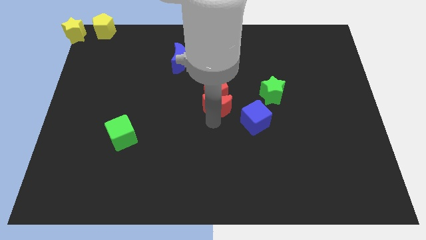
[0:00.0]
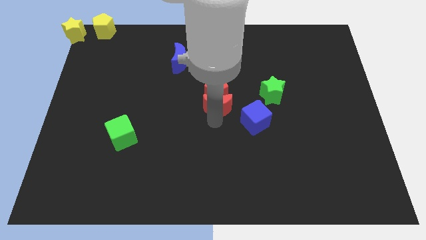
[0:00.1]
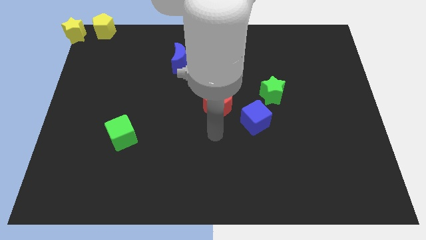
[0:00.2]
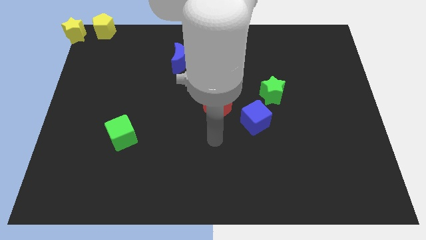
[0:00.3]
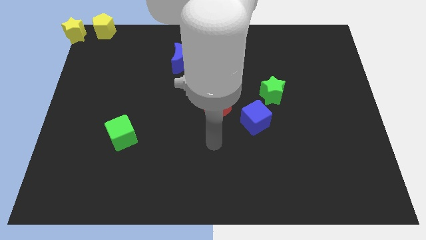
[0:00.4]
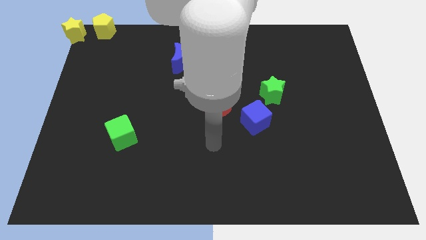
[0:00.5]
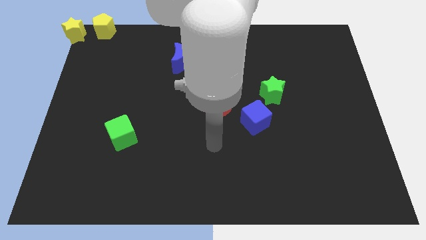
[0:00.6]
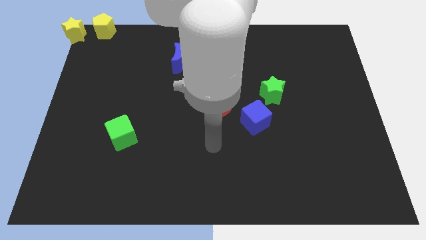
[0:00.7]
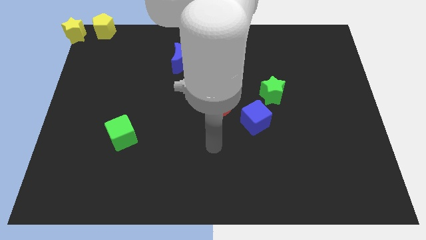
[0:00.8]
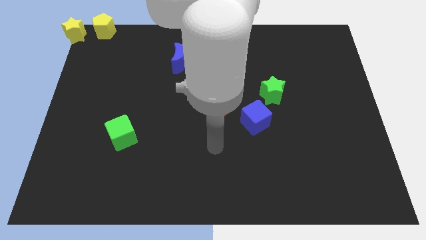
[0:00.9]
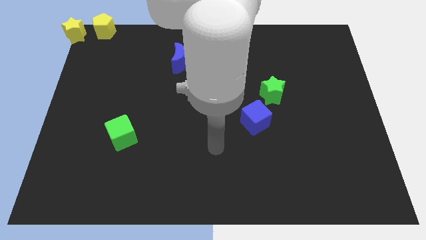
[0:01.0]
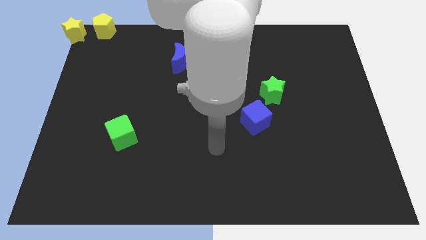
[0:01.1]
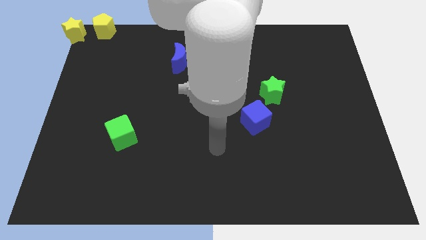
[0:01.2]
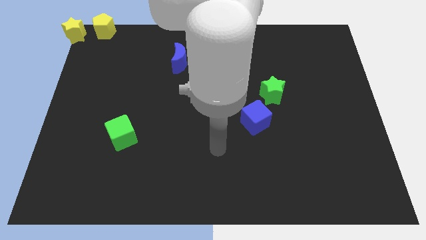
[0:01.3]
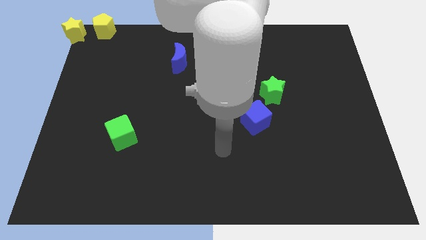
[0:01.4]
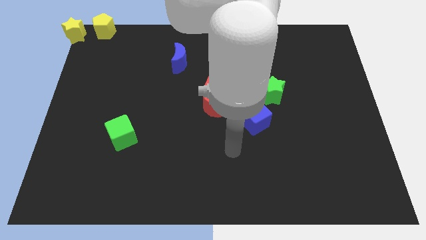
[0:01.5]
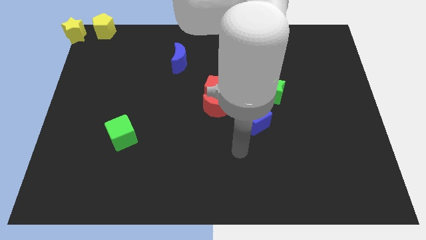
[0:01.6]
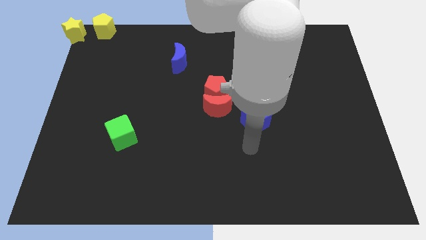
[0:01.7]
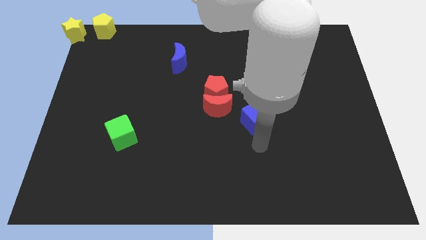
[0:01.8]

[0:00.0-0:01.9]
point your arm at the bottom of blue cube

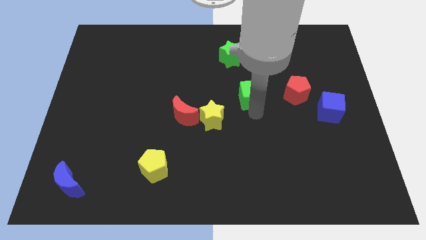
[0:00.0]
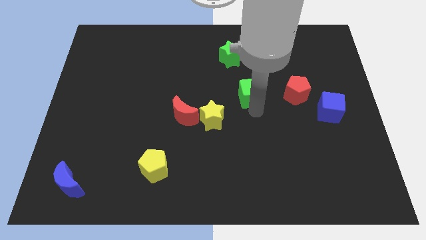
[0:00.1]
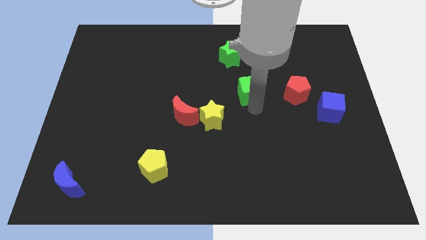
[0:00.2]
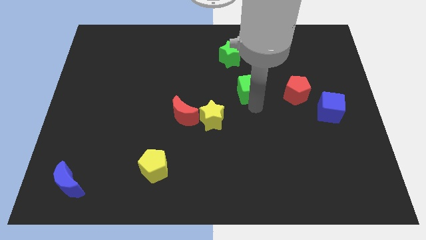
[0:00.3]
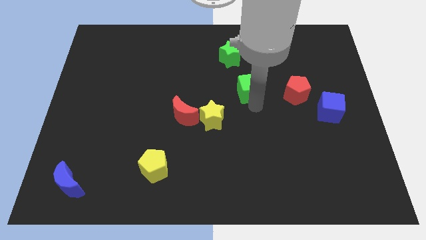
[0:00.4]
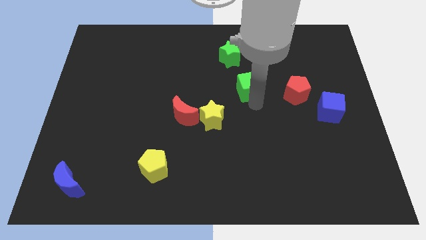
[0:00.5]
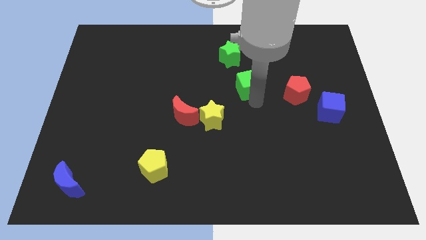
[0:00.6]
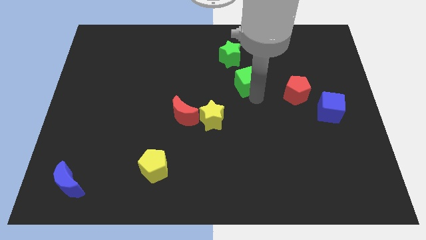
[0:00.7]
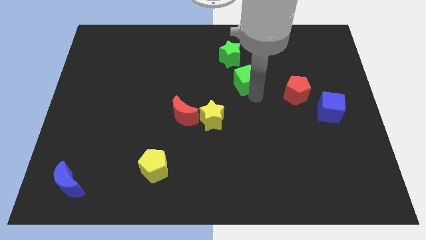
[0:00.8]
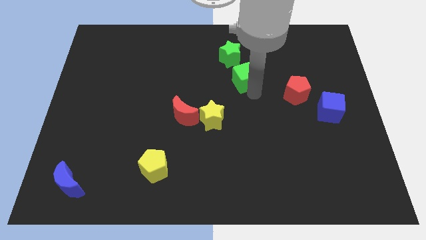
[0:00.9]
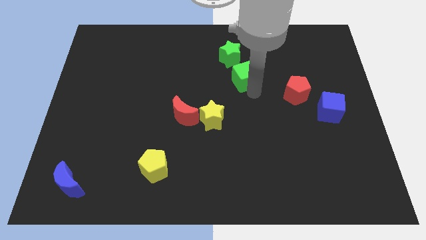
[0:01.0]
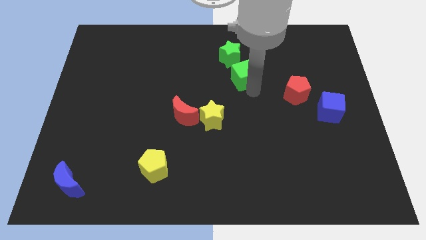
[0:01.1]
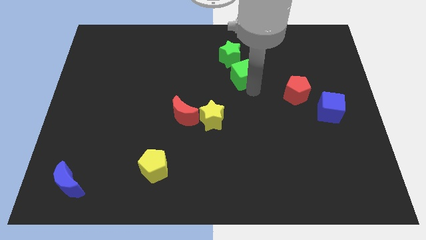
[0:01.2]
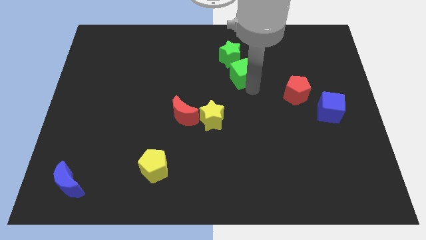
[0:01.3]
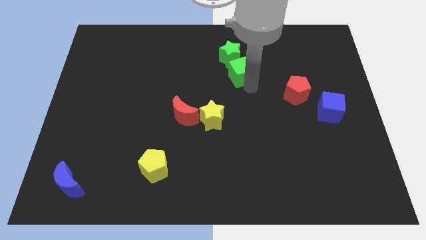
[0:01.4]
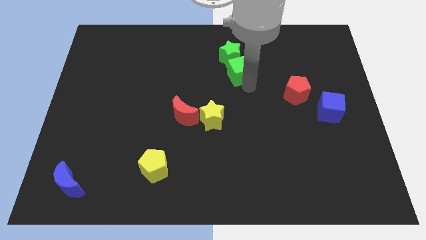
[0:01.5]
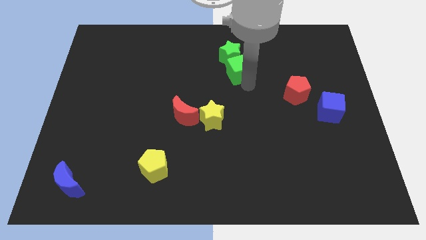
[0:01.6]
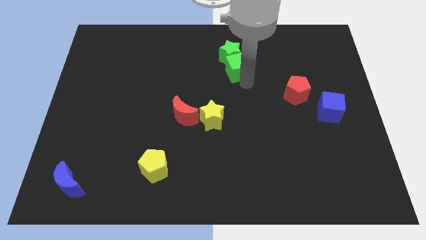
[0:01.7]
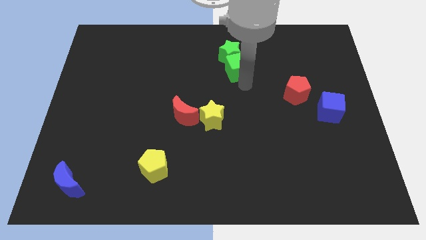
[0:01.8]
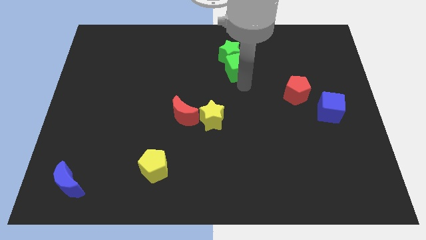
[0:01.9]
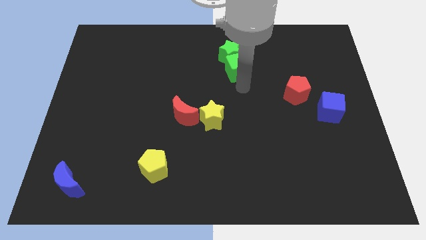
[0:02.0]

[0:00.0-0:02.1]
move the green cube into the green star

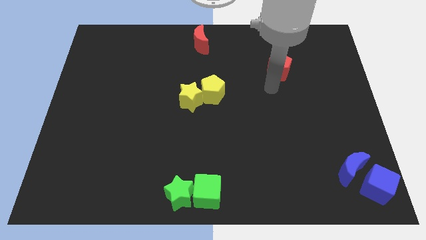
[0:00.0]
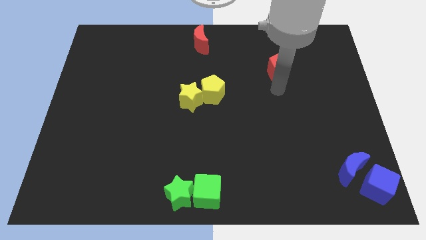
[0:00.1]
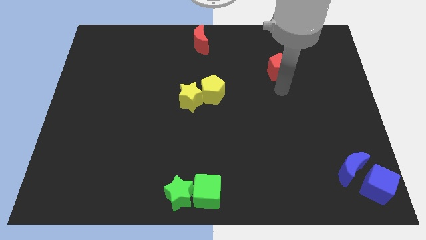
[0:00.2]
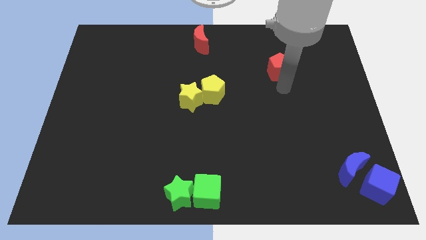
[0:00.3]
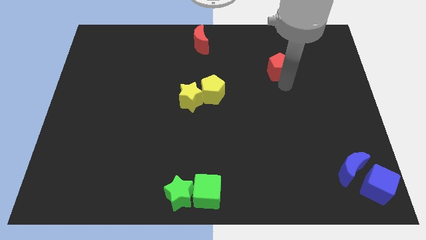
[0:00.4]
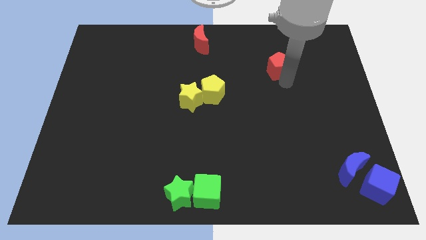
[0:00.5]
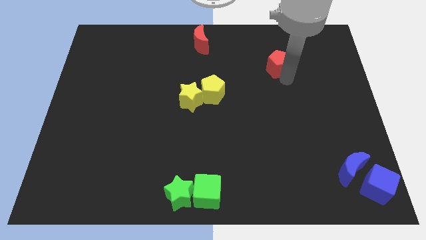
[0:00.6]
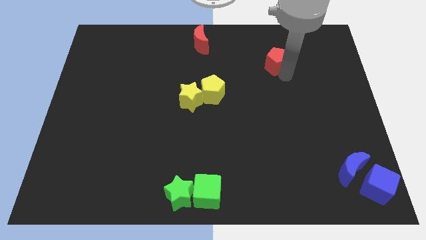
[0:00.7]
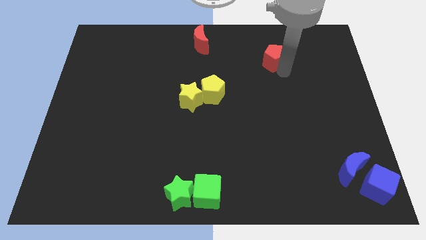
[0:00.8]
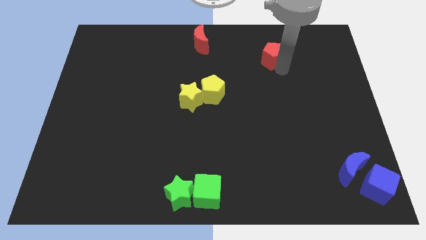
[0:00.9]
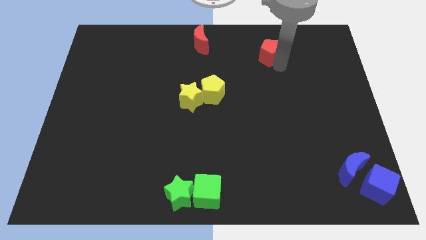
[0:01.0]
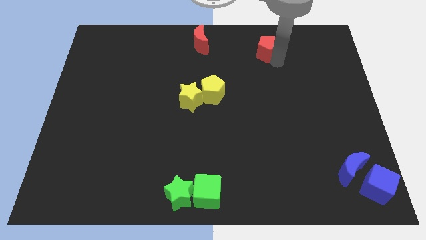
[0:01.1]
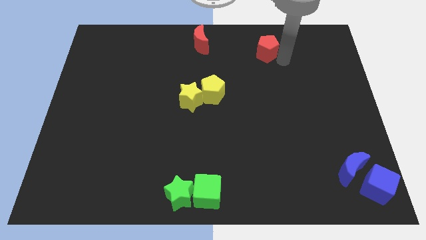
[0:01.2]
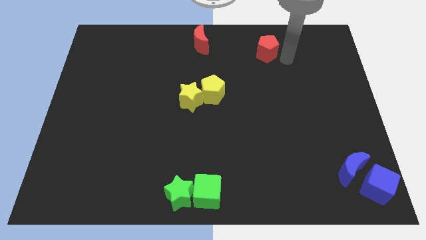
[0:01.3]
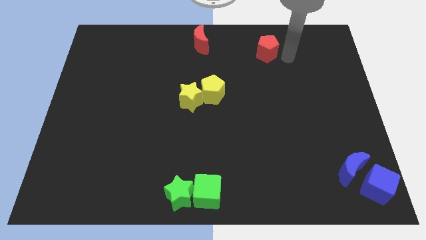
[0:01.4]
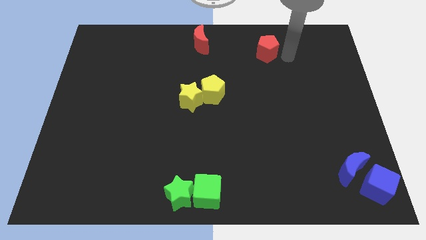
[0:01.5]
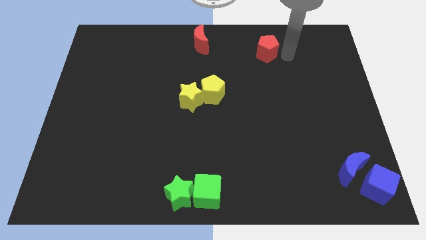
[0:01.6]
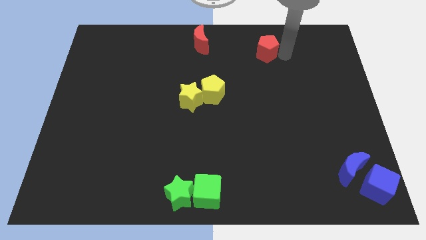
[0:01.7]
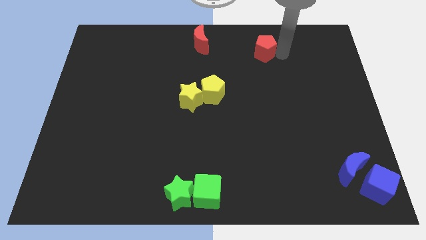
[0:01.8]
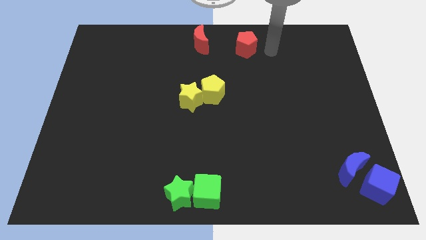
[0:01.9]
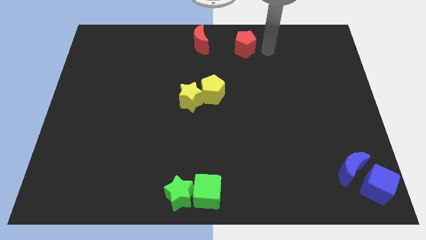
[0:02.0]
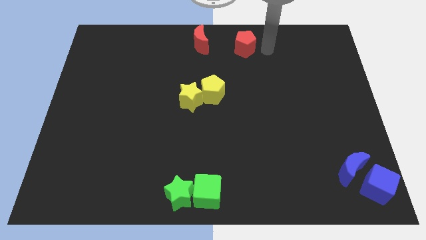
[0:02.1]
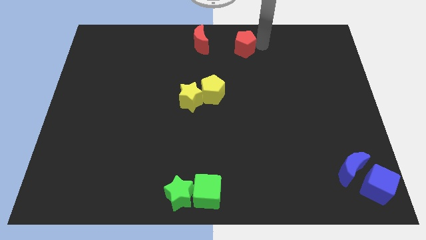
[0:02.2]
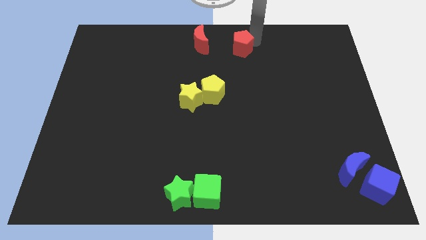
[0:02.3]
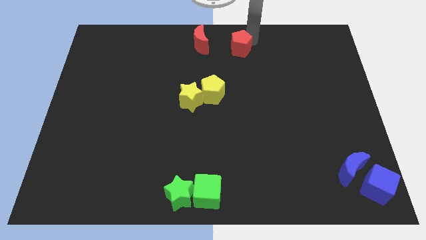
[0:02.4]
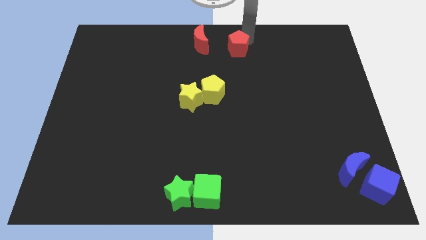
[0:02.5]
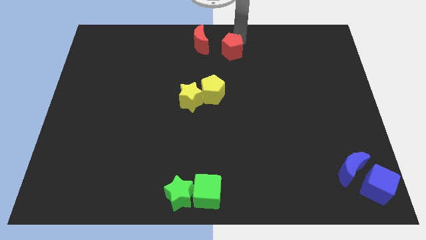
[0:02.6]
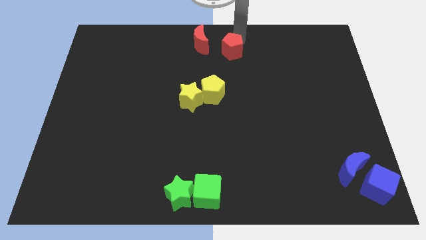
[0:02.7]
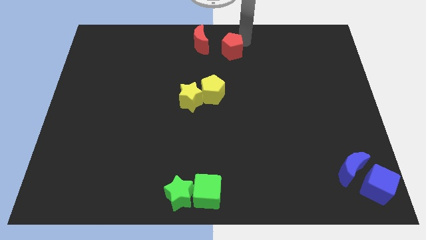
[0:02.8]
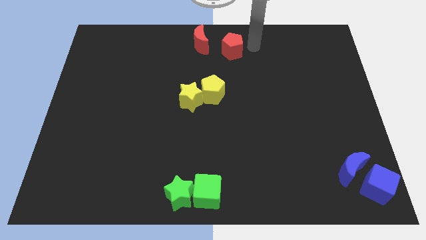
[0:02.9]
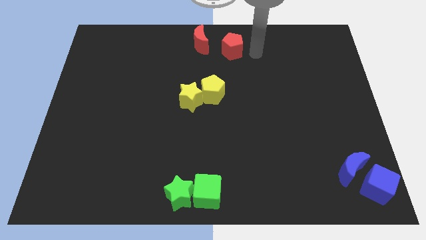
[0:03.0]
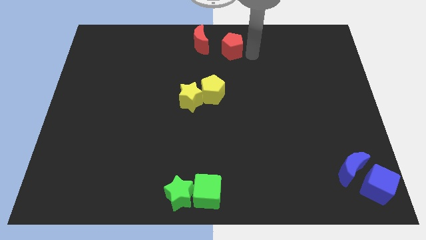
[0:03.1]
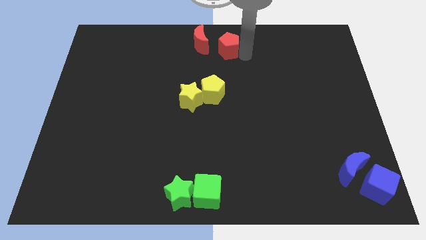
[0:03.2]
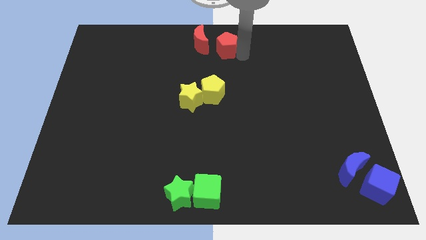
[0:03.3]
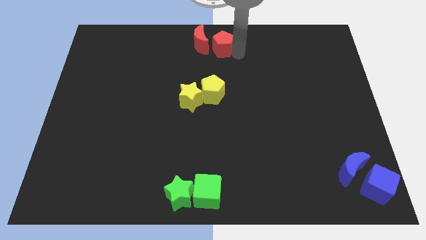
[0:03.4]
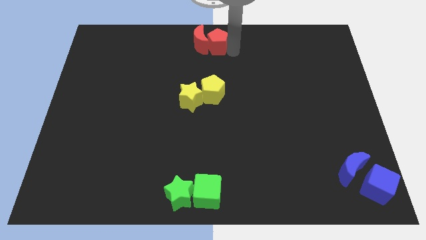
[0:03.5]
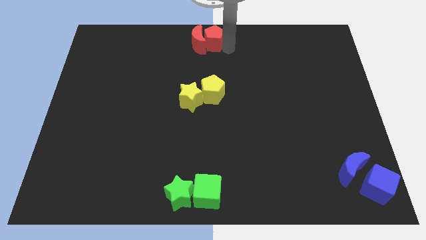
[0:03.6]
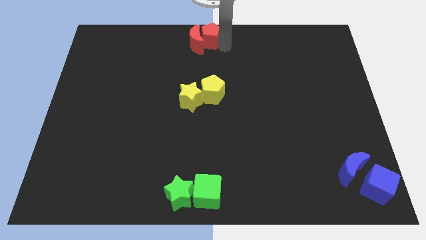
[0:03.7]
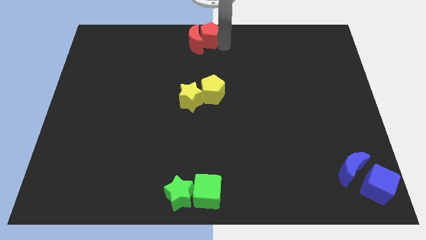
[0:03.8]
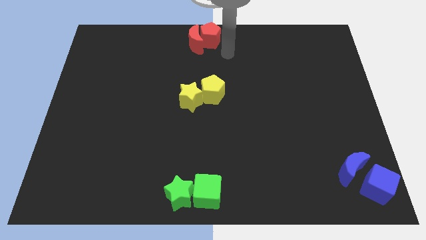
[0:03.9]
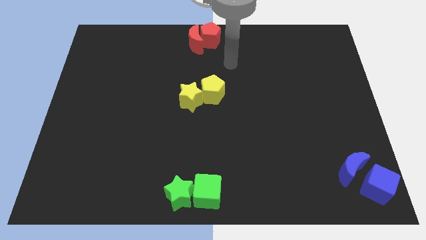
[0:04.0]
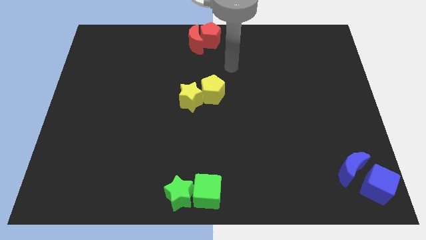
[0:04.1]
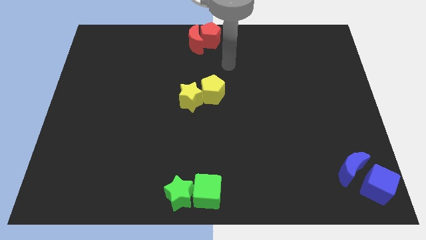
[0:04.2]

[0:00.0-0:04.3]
move the red pentagon into the red crescent

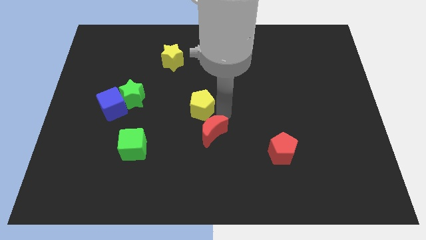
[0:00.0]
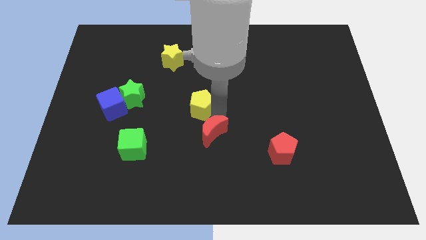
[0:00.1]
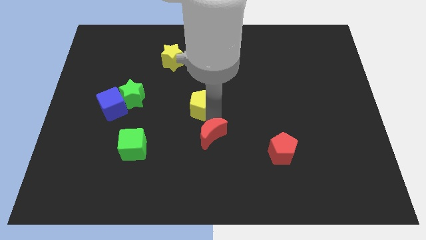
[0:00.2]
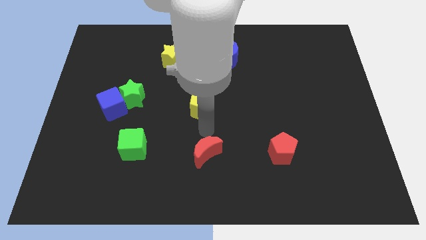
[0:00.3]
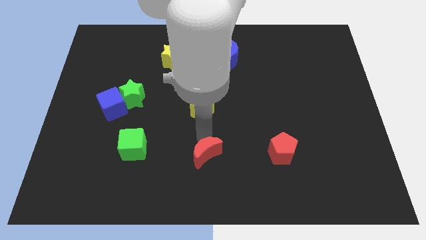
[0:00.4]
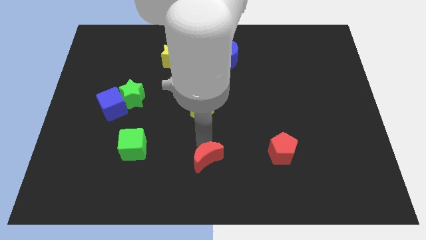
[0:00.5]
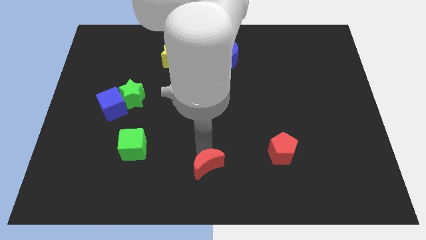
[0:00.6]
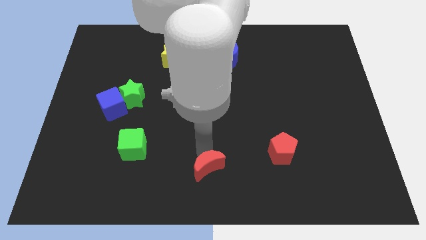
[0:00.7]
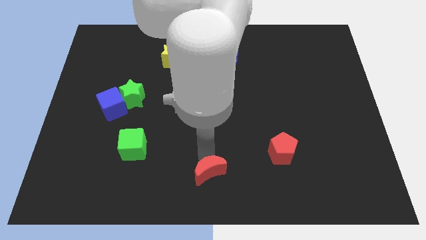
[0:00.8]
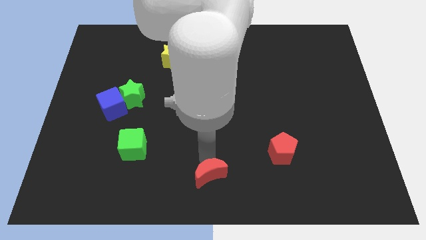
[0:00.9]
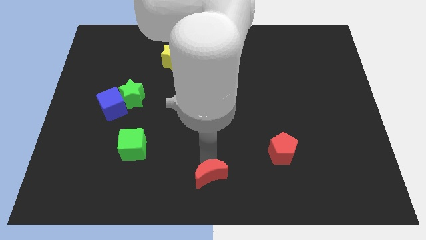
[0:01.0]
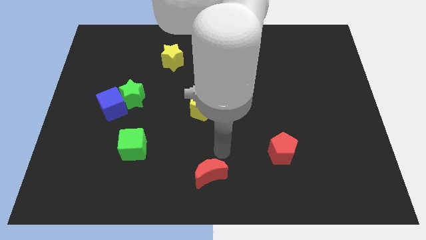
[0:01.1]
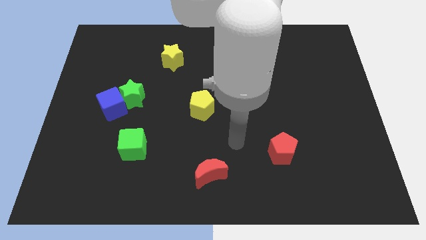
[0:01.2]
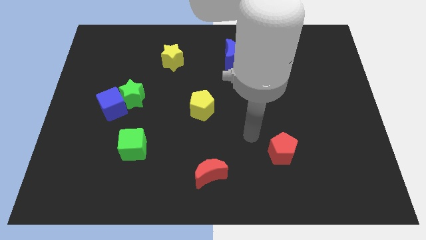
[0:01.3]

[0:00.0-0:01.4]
push the red crescent parallel to the left of the red pentagon
